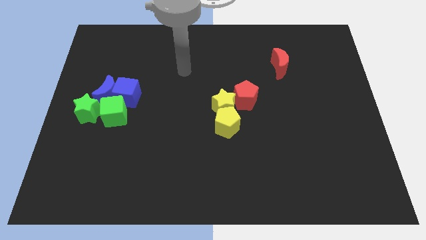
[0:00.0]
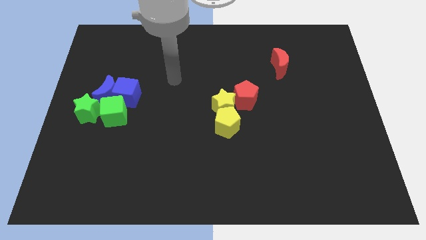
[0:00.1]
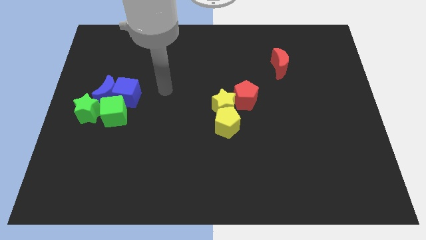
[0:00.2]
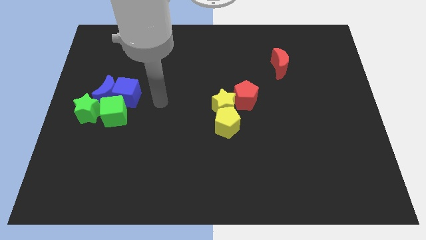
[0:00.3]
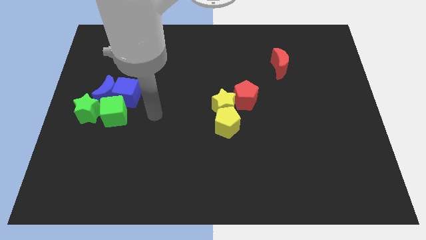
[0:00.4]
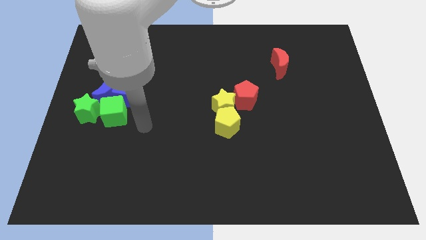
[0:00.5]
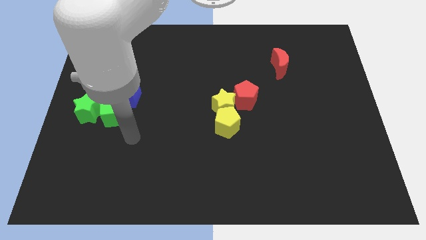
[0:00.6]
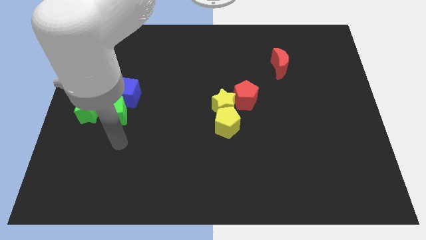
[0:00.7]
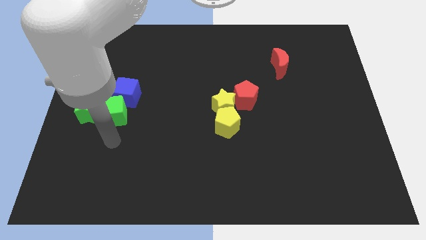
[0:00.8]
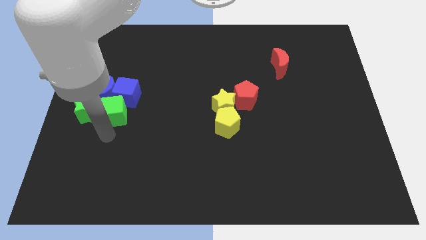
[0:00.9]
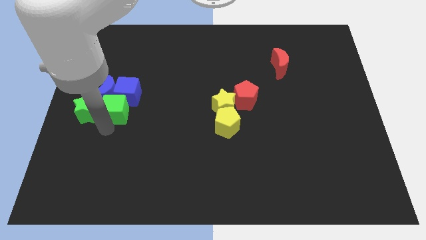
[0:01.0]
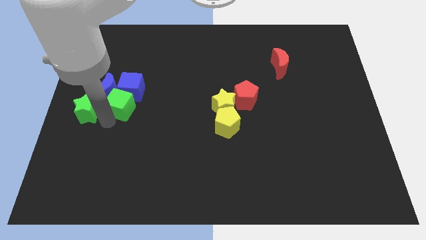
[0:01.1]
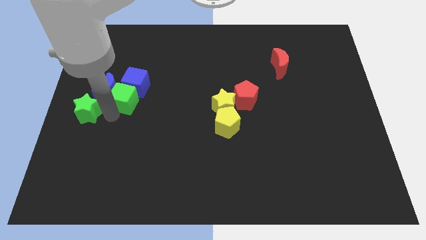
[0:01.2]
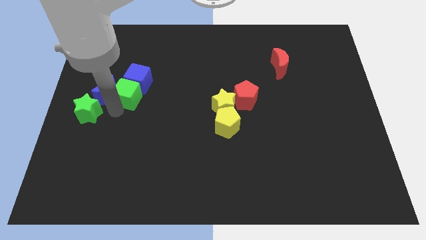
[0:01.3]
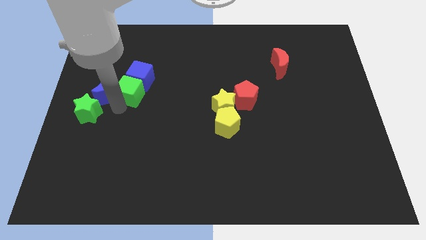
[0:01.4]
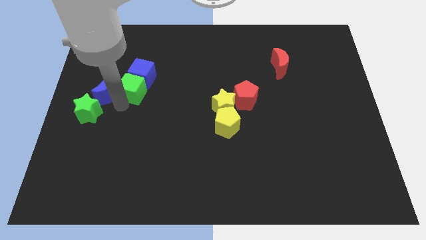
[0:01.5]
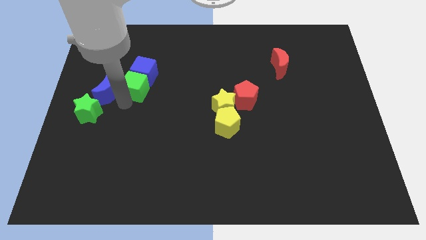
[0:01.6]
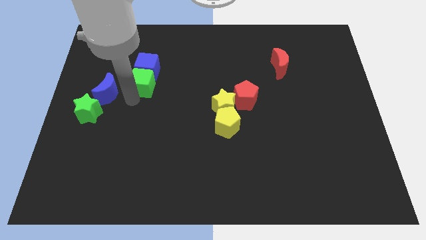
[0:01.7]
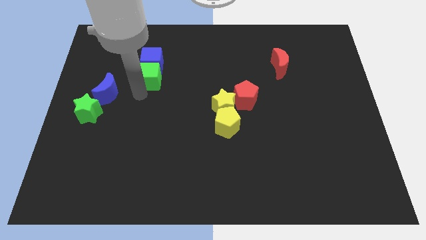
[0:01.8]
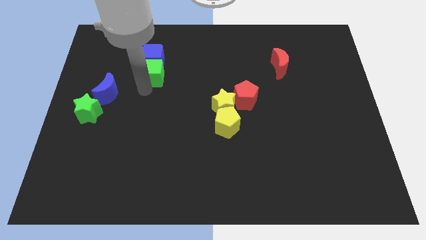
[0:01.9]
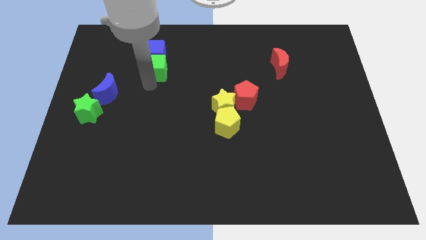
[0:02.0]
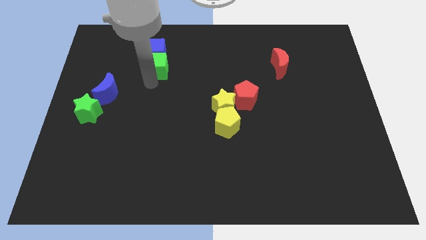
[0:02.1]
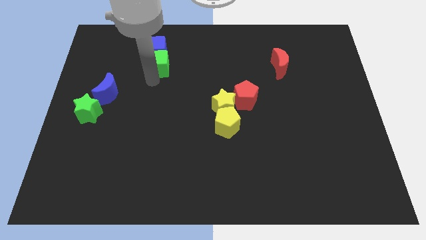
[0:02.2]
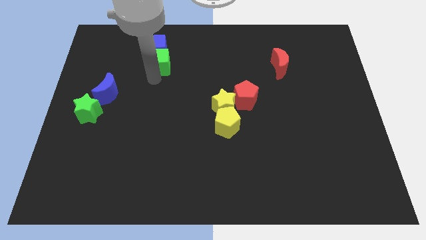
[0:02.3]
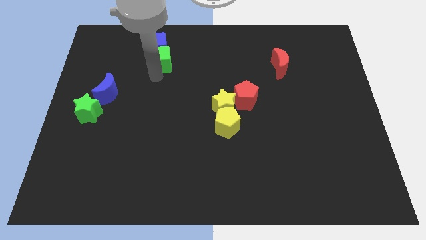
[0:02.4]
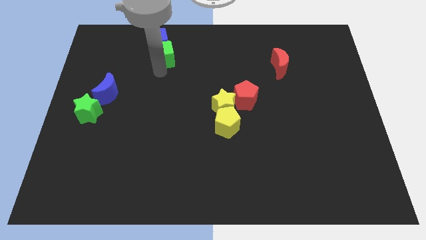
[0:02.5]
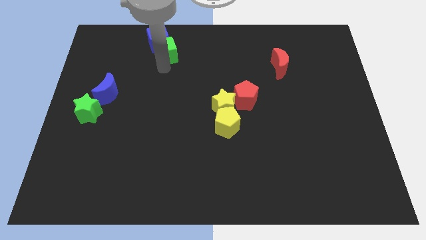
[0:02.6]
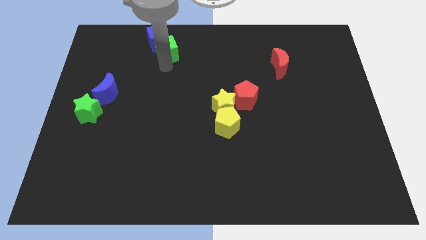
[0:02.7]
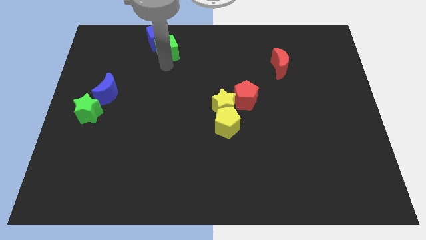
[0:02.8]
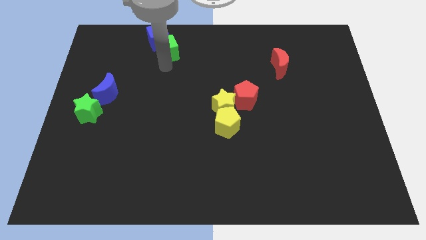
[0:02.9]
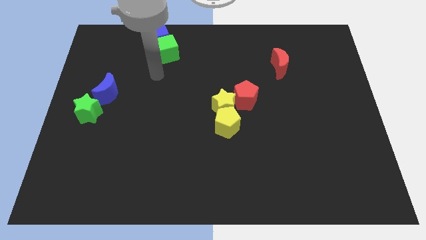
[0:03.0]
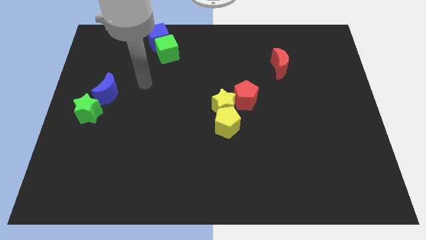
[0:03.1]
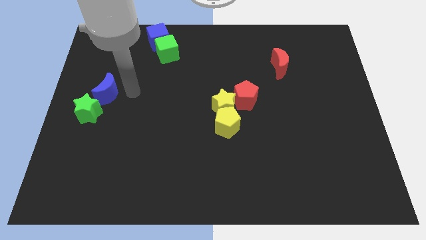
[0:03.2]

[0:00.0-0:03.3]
push both the blue cube and green cube to the top side of the board

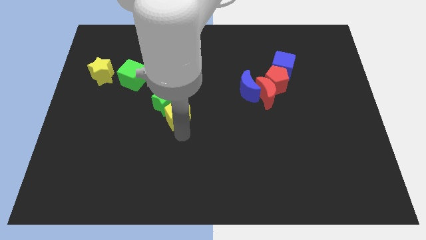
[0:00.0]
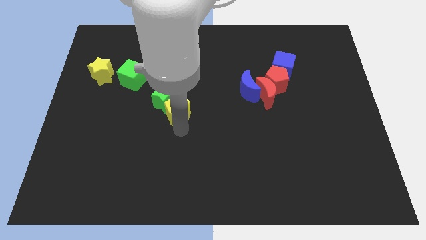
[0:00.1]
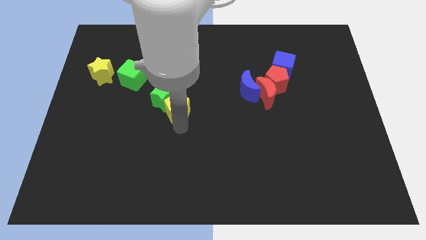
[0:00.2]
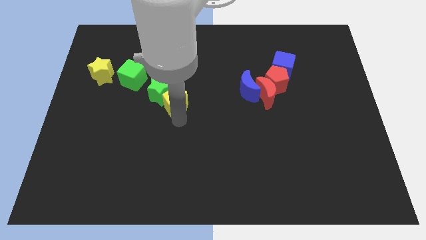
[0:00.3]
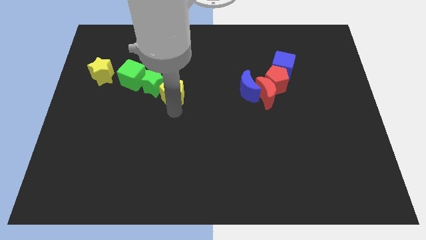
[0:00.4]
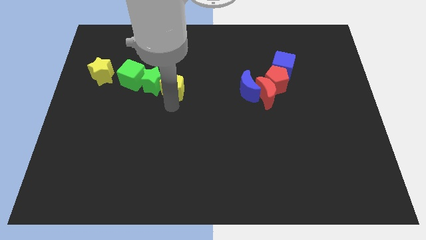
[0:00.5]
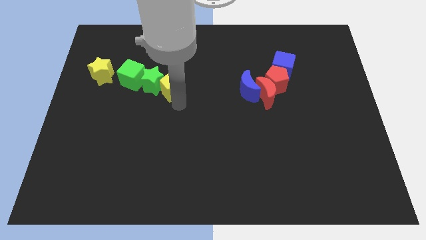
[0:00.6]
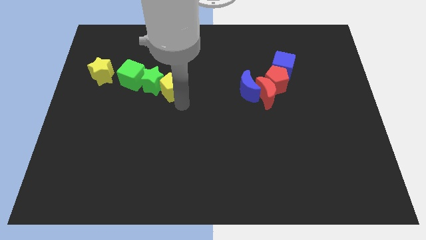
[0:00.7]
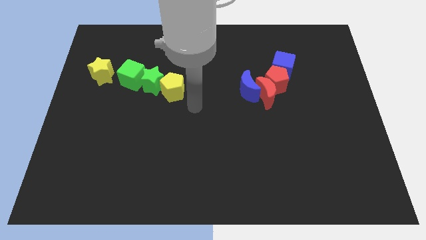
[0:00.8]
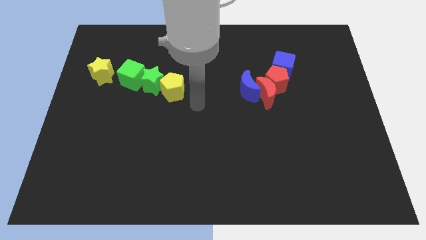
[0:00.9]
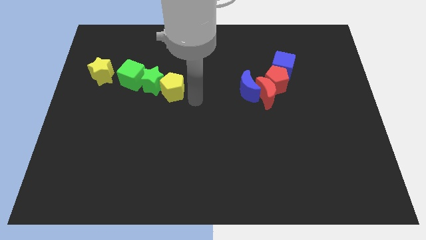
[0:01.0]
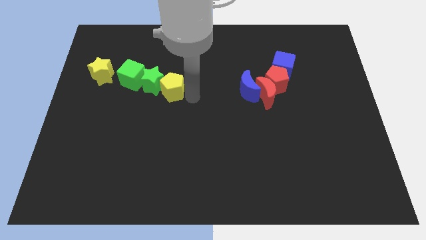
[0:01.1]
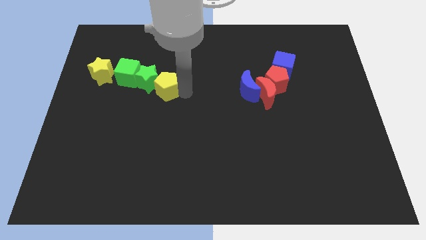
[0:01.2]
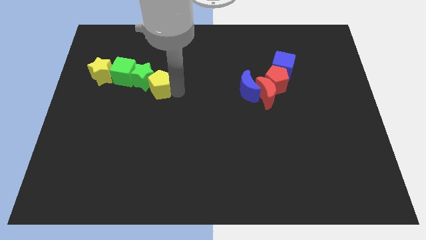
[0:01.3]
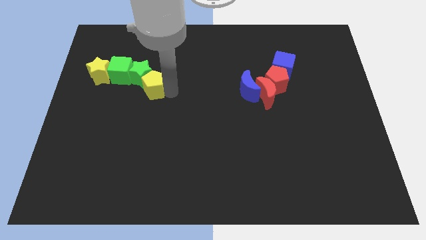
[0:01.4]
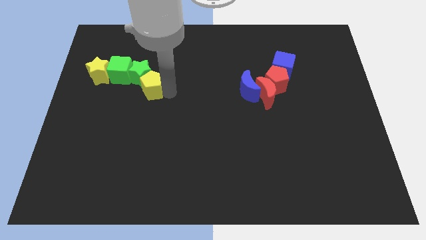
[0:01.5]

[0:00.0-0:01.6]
push the green star and yellow pentagon into the green cube

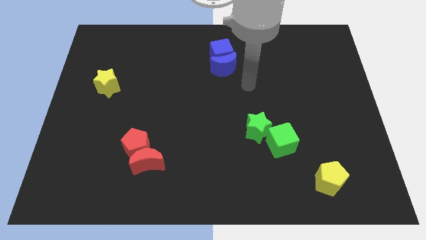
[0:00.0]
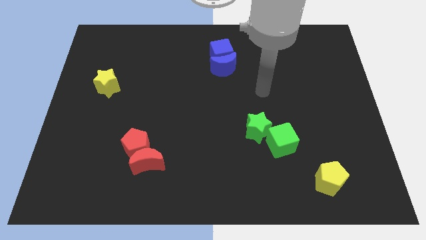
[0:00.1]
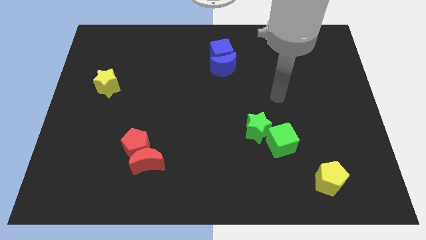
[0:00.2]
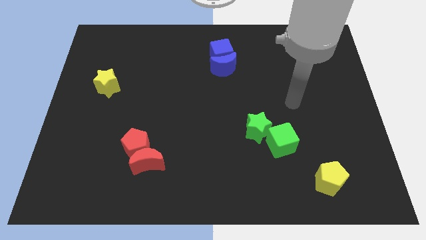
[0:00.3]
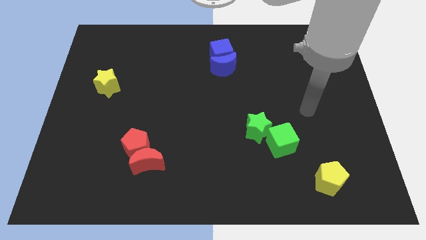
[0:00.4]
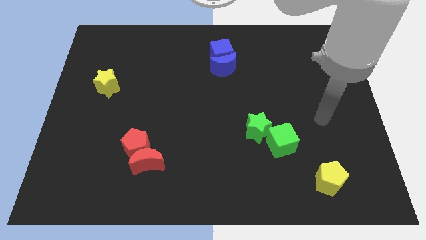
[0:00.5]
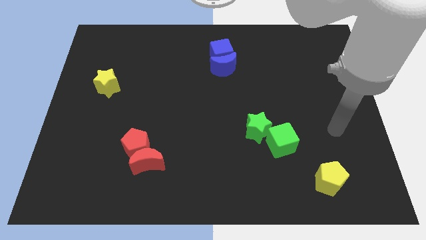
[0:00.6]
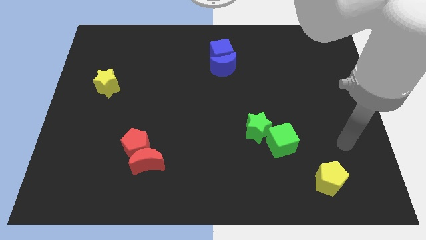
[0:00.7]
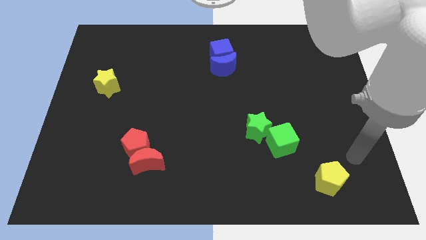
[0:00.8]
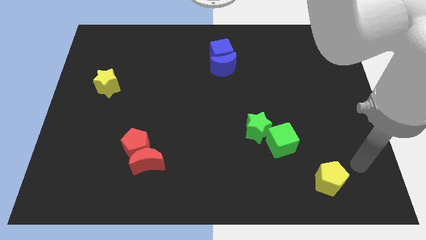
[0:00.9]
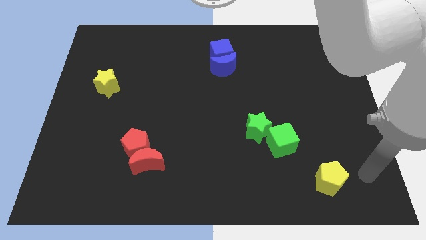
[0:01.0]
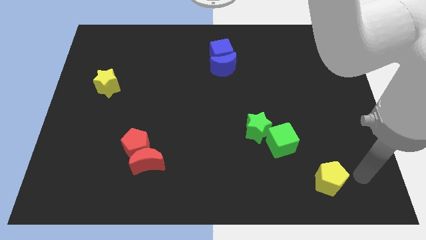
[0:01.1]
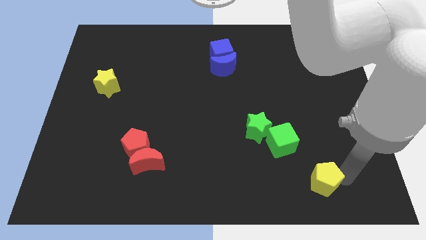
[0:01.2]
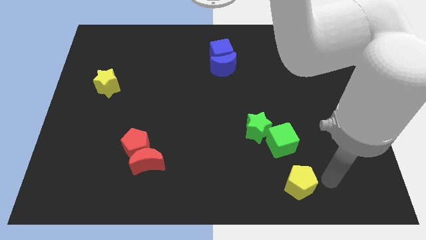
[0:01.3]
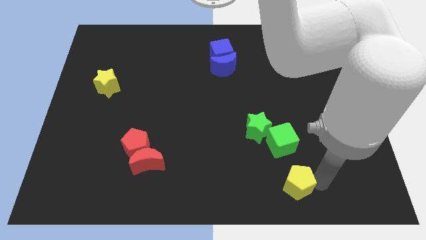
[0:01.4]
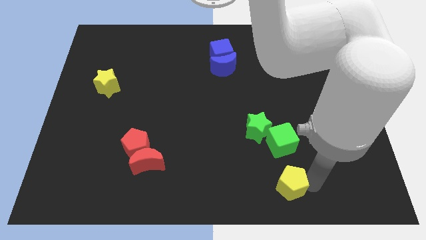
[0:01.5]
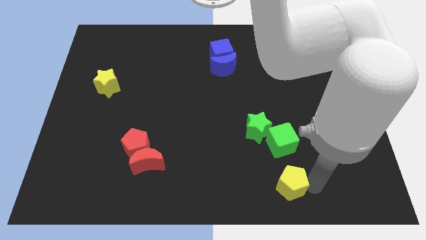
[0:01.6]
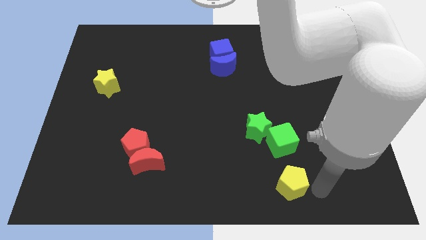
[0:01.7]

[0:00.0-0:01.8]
move the yellow pentagon to the bottom of the green cube

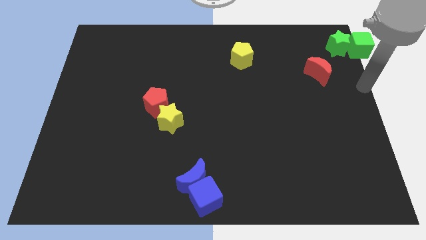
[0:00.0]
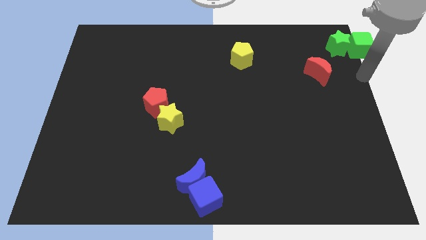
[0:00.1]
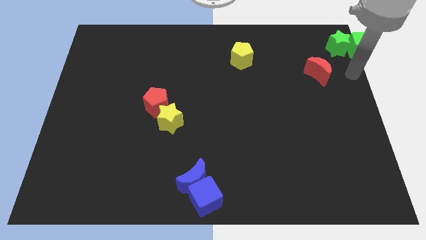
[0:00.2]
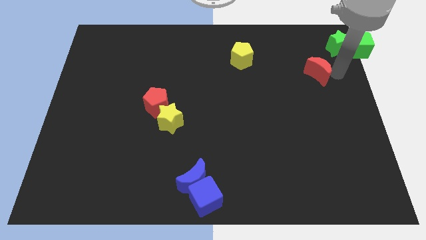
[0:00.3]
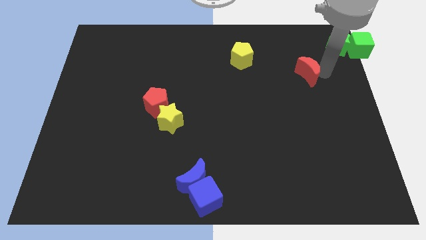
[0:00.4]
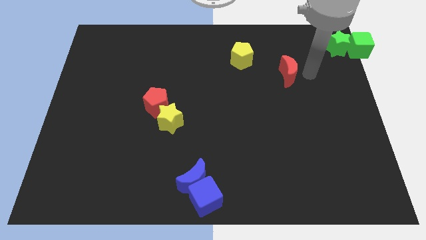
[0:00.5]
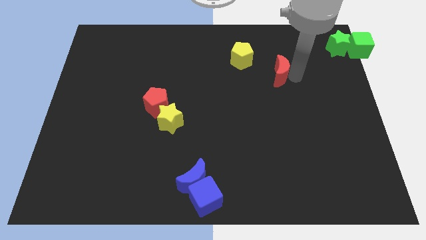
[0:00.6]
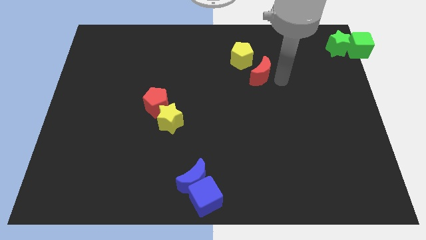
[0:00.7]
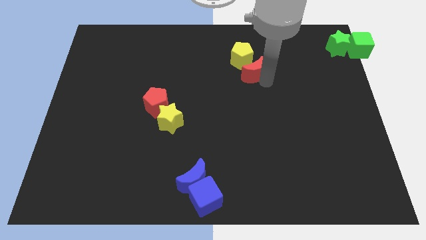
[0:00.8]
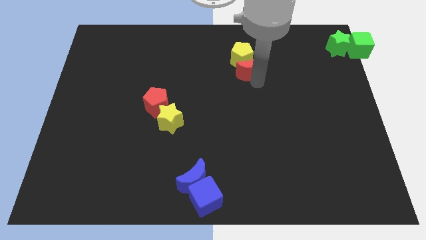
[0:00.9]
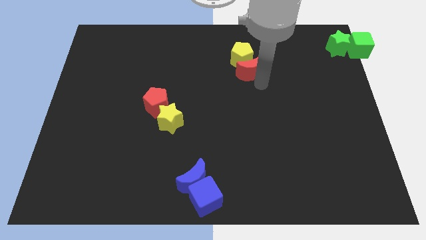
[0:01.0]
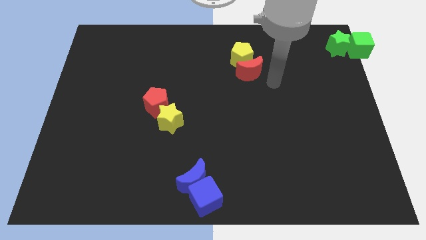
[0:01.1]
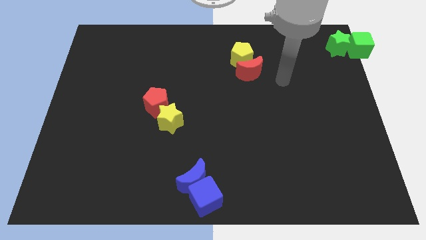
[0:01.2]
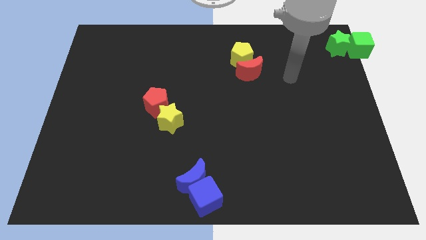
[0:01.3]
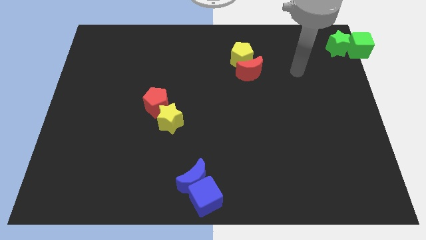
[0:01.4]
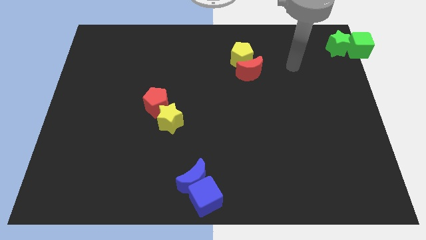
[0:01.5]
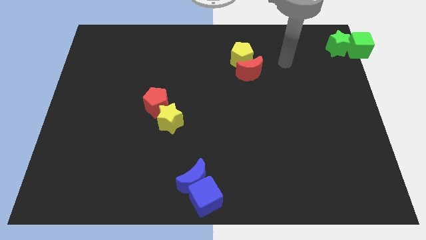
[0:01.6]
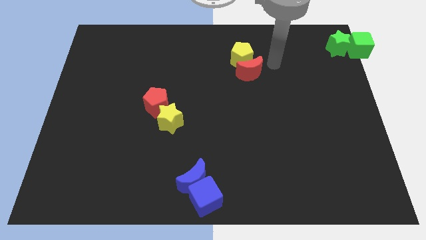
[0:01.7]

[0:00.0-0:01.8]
drag the red crescent close to the yellow pentagon

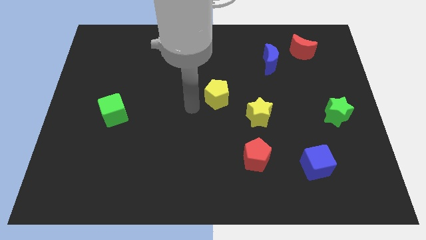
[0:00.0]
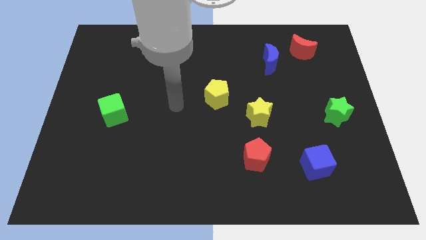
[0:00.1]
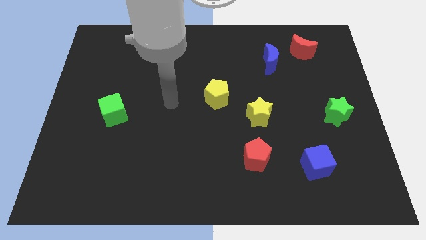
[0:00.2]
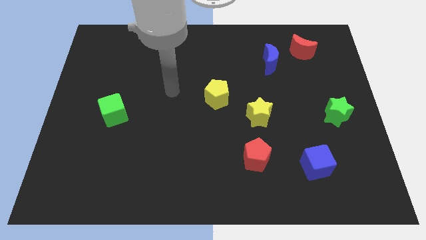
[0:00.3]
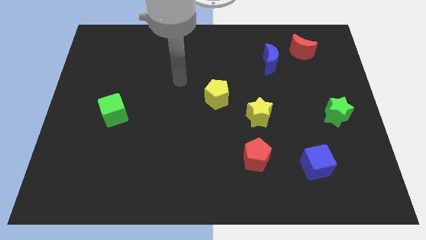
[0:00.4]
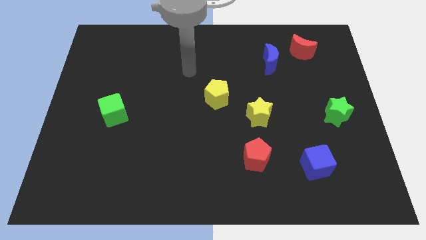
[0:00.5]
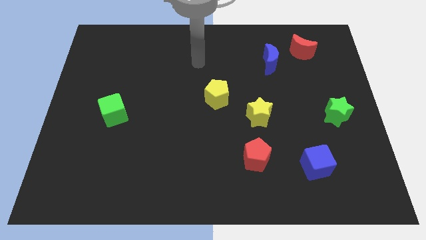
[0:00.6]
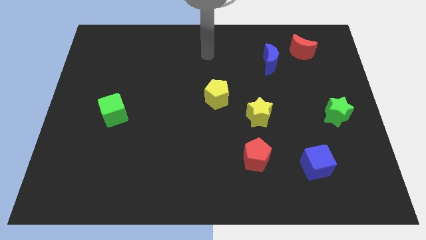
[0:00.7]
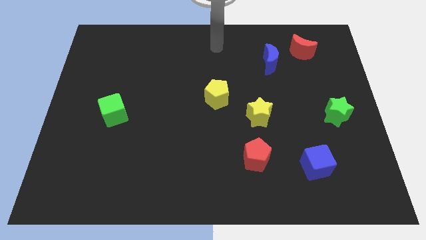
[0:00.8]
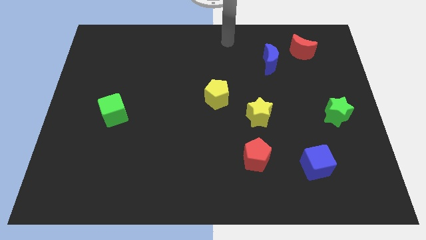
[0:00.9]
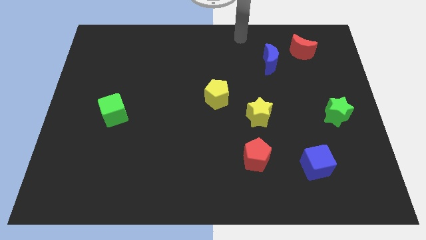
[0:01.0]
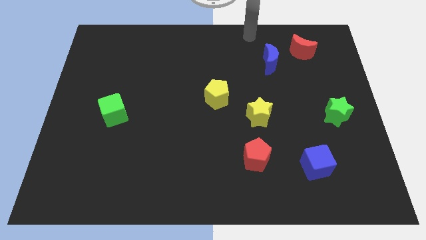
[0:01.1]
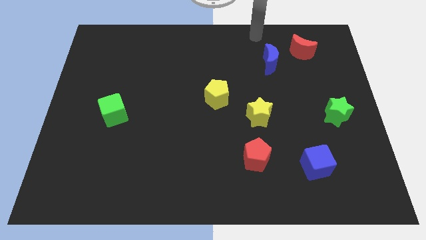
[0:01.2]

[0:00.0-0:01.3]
move yourself away from the yellow pentagon
